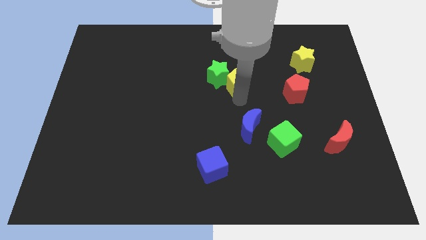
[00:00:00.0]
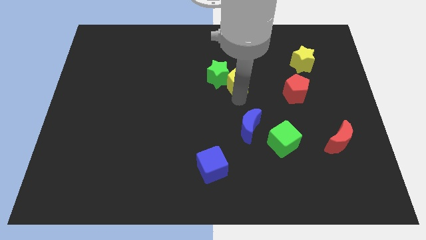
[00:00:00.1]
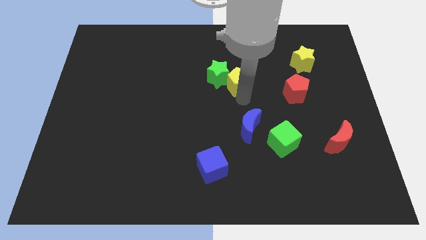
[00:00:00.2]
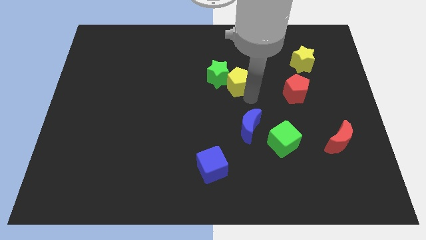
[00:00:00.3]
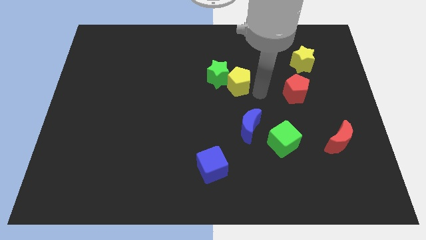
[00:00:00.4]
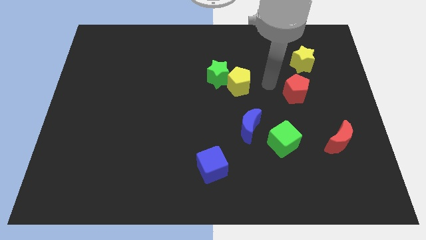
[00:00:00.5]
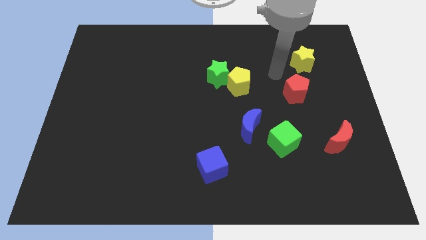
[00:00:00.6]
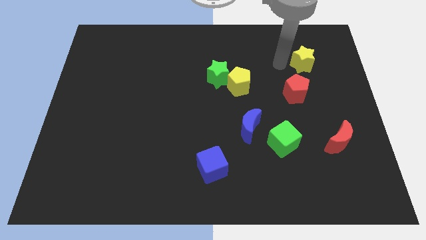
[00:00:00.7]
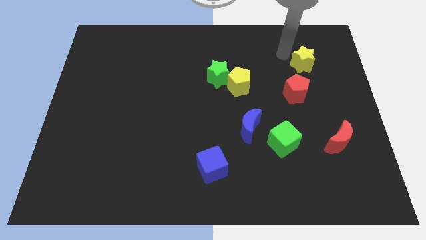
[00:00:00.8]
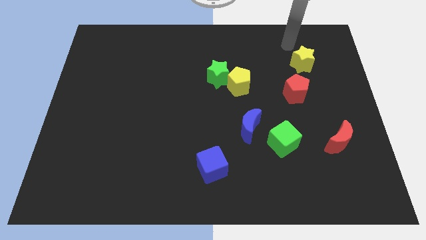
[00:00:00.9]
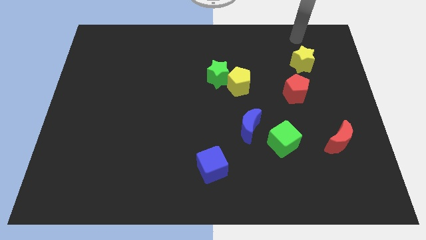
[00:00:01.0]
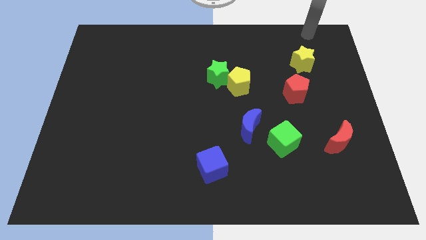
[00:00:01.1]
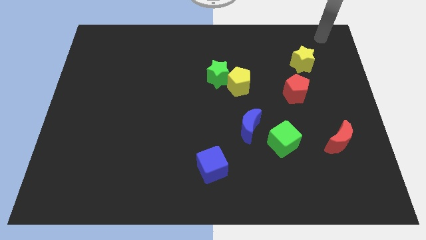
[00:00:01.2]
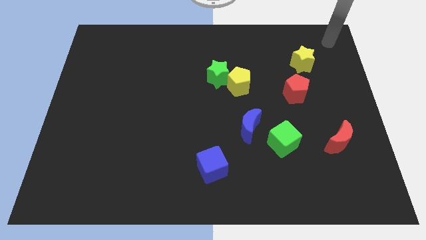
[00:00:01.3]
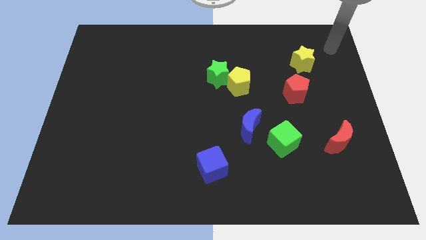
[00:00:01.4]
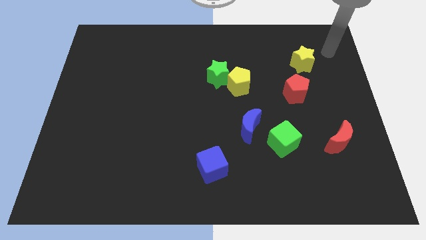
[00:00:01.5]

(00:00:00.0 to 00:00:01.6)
point your arm at the right side of the board

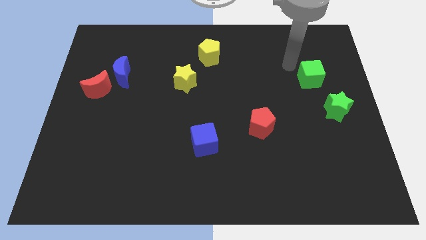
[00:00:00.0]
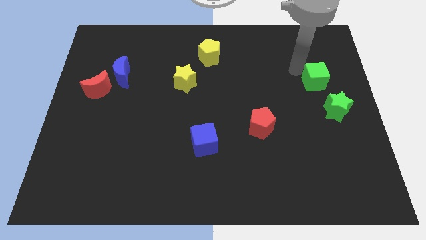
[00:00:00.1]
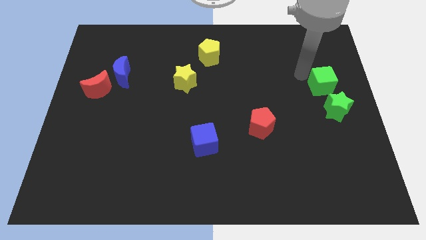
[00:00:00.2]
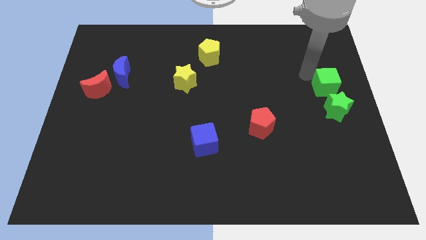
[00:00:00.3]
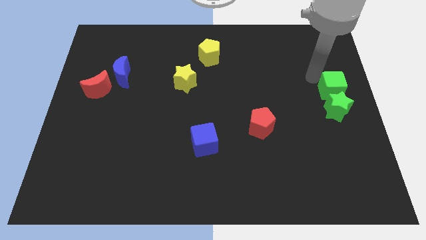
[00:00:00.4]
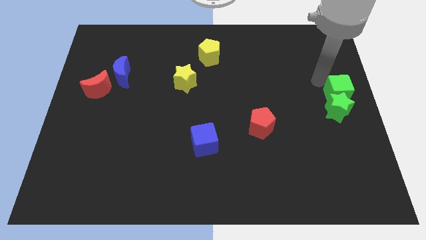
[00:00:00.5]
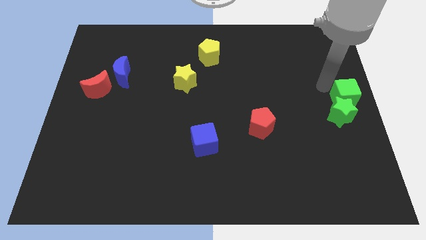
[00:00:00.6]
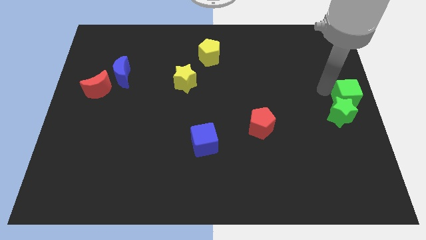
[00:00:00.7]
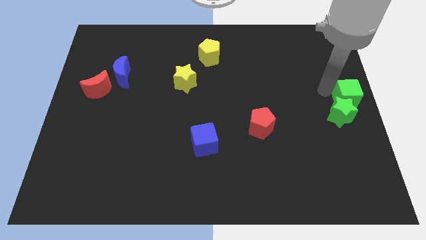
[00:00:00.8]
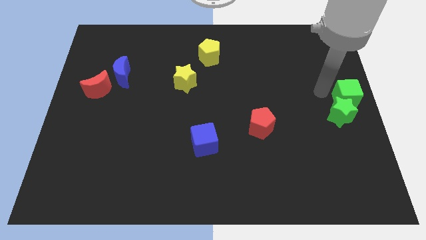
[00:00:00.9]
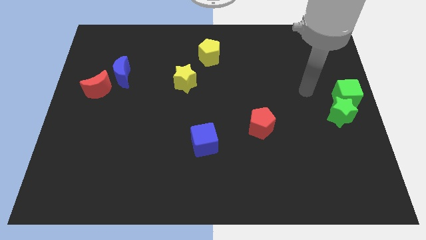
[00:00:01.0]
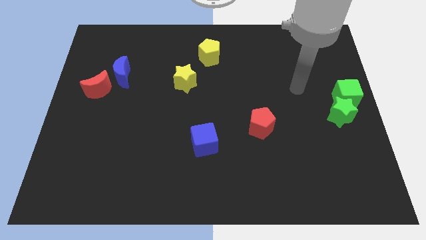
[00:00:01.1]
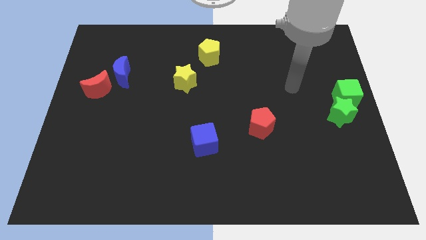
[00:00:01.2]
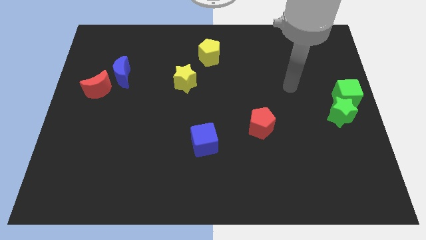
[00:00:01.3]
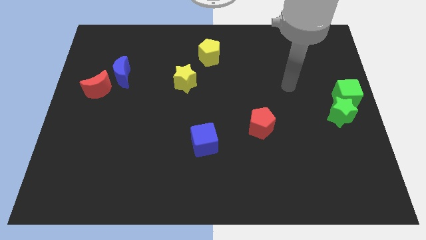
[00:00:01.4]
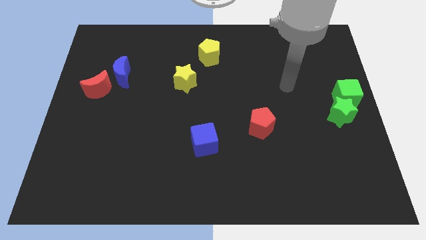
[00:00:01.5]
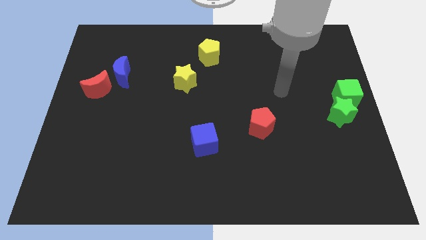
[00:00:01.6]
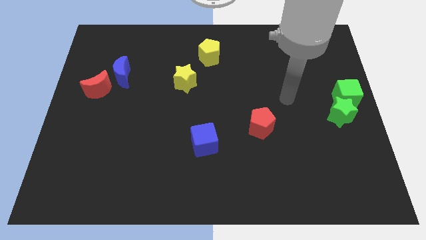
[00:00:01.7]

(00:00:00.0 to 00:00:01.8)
place the green cube to the top right of the green star

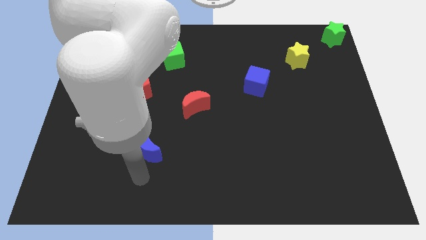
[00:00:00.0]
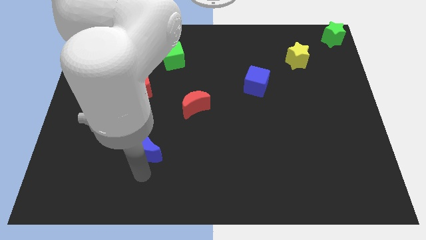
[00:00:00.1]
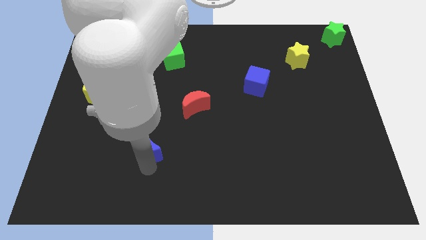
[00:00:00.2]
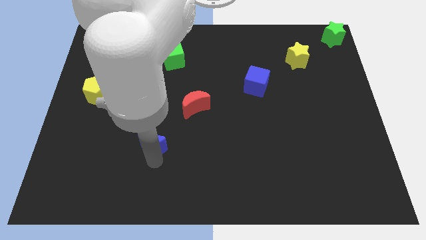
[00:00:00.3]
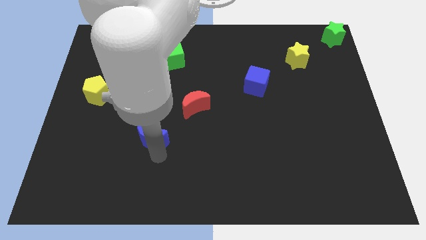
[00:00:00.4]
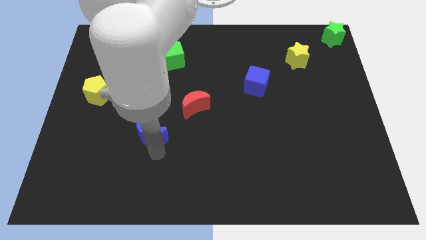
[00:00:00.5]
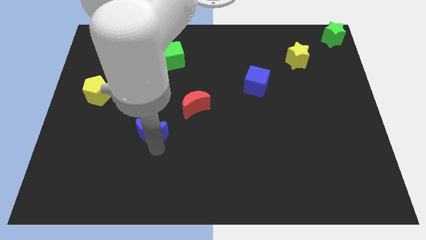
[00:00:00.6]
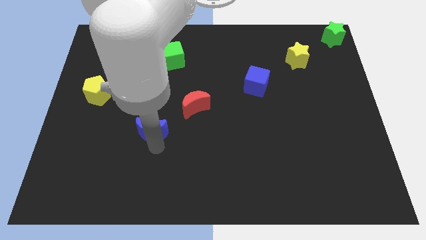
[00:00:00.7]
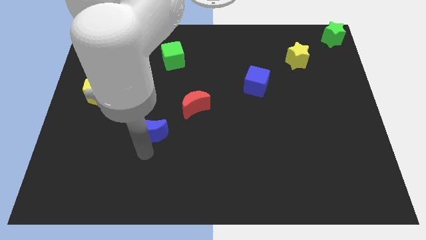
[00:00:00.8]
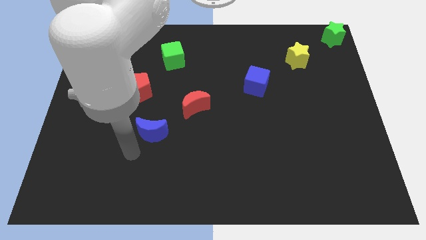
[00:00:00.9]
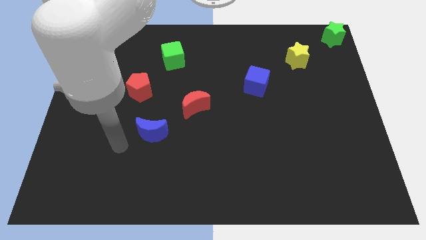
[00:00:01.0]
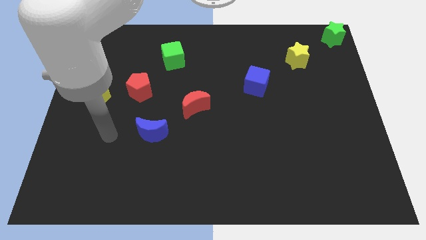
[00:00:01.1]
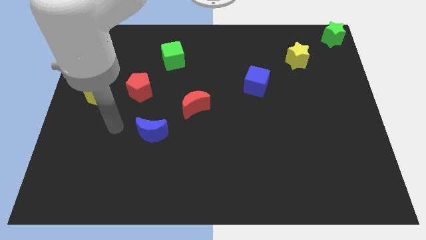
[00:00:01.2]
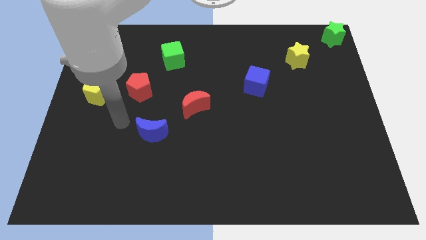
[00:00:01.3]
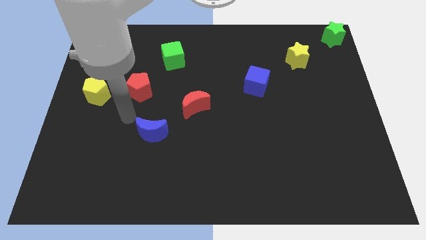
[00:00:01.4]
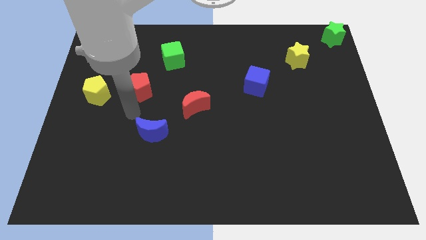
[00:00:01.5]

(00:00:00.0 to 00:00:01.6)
push the blue moon up slightly

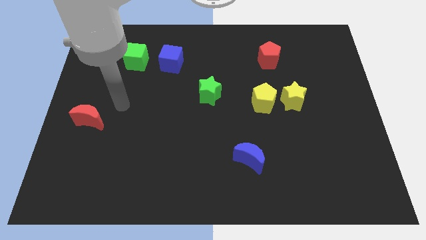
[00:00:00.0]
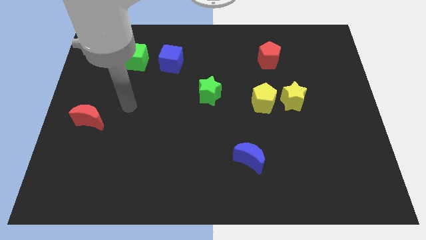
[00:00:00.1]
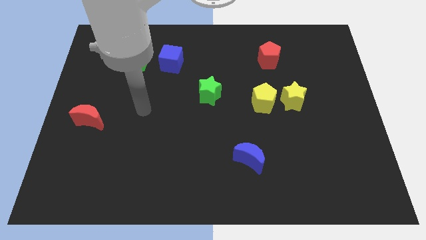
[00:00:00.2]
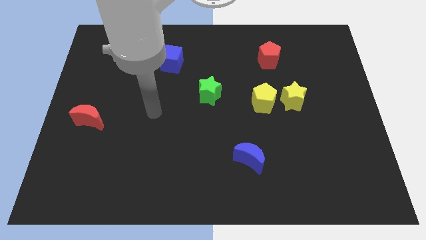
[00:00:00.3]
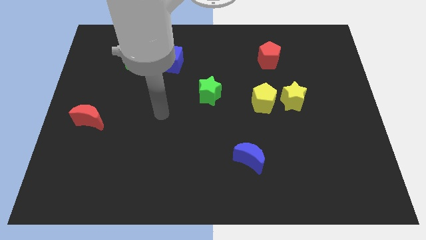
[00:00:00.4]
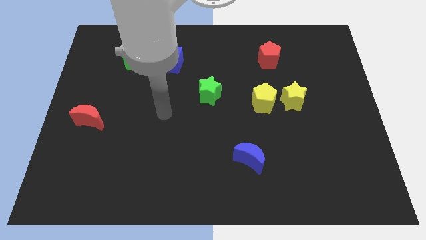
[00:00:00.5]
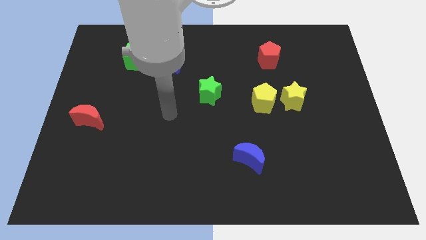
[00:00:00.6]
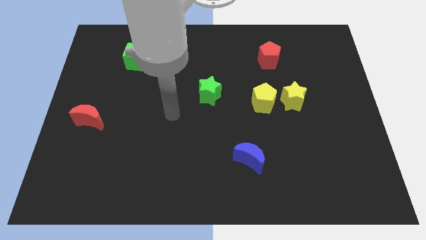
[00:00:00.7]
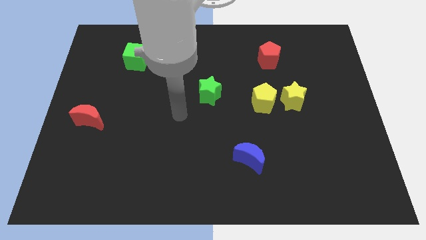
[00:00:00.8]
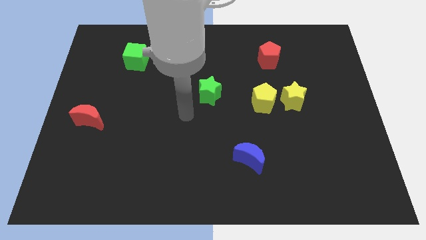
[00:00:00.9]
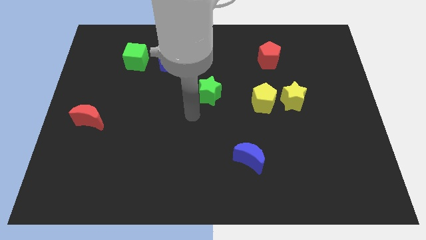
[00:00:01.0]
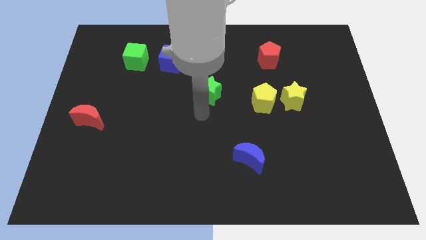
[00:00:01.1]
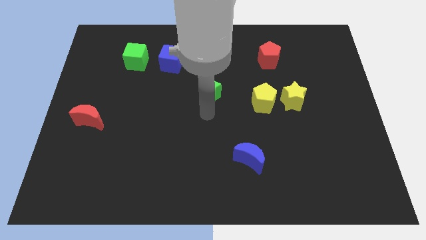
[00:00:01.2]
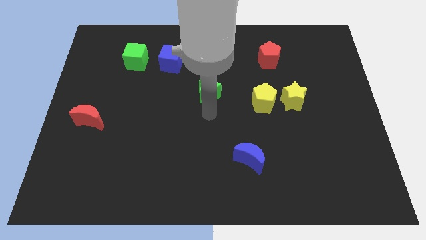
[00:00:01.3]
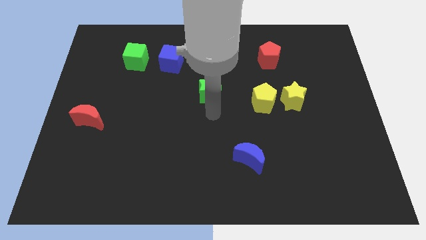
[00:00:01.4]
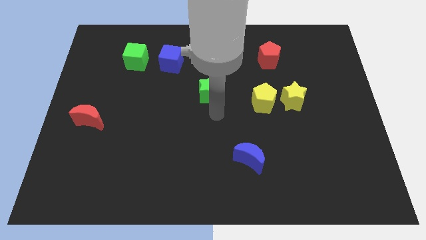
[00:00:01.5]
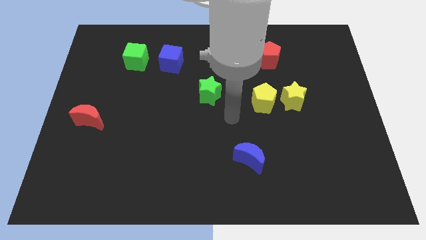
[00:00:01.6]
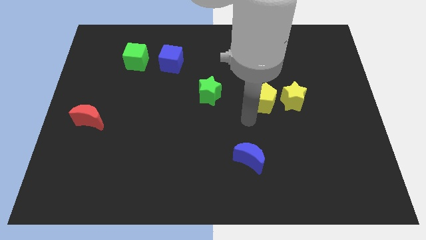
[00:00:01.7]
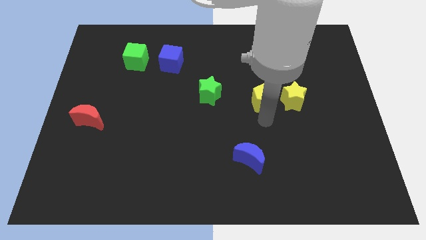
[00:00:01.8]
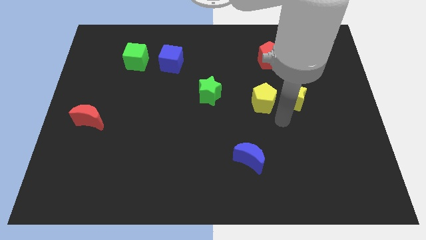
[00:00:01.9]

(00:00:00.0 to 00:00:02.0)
place your arm below the yellow pentagon

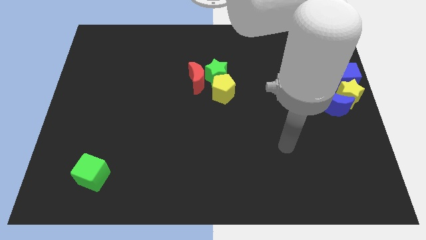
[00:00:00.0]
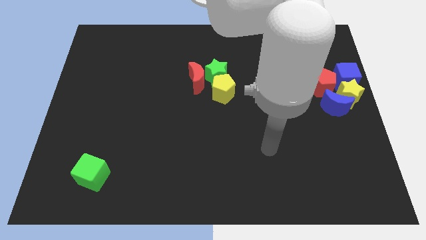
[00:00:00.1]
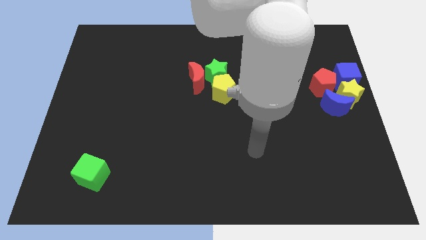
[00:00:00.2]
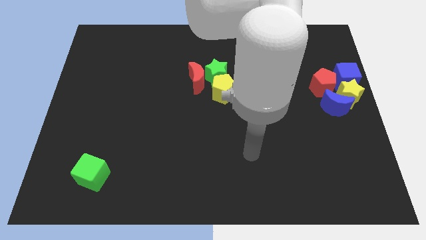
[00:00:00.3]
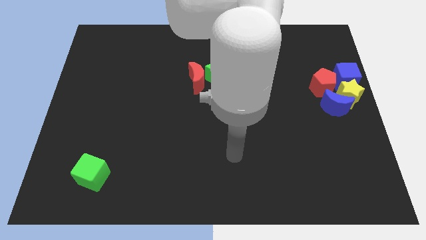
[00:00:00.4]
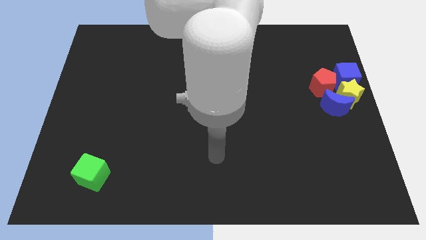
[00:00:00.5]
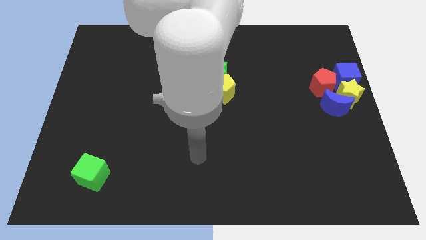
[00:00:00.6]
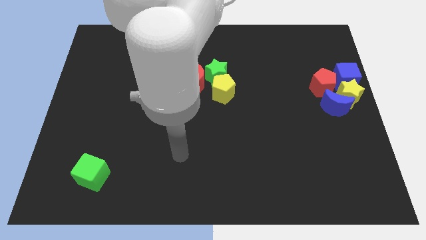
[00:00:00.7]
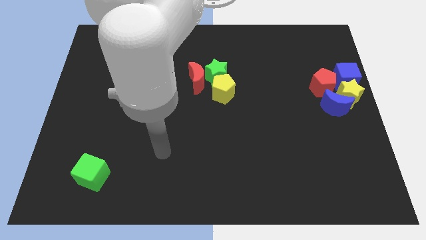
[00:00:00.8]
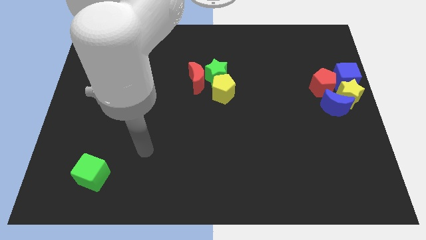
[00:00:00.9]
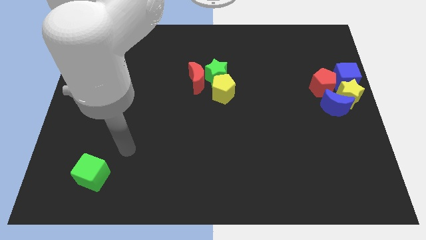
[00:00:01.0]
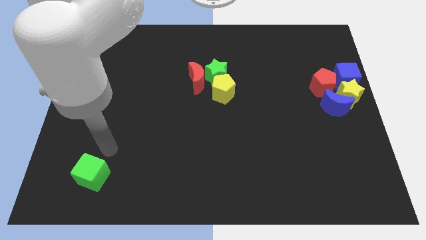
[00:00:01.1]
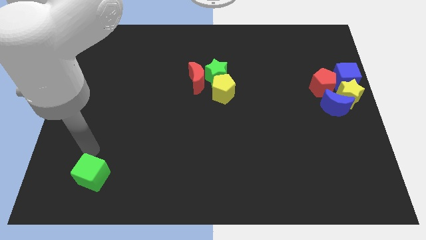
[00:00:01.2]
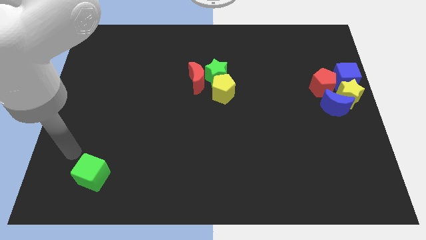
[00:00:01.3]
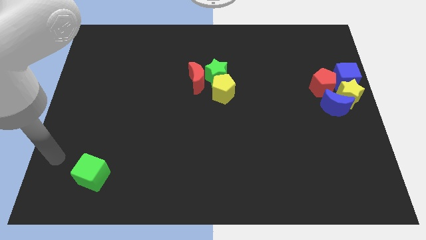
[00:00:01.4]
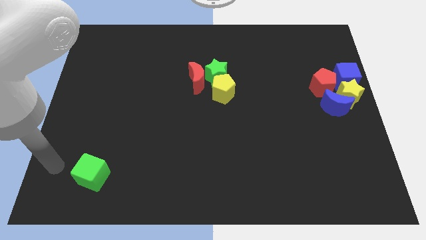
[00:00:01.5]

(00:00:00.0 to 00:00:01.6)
point your arm at the left side of the green cube

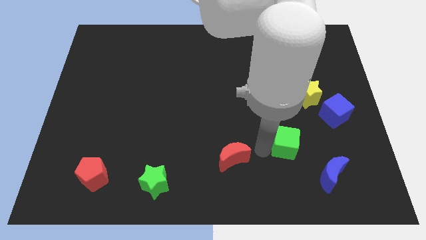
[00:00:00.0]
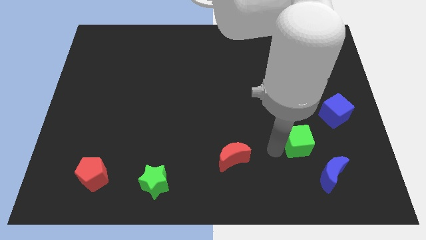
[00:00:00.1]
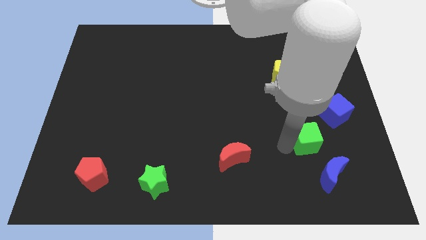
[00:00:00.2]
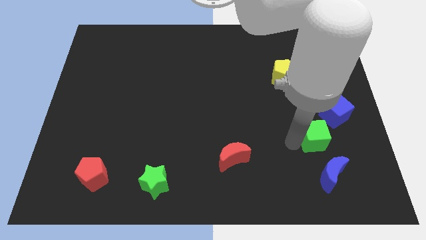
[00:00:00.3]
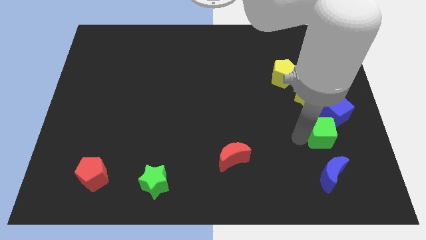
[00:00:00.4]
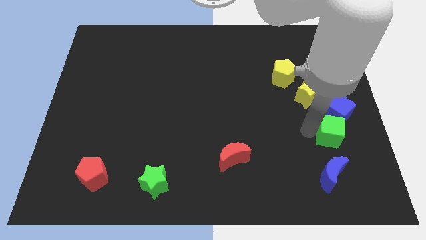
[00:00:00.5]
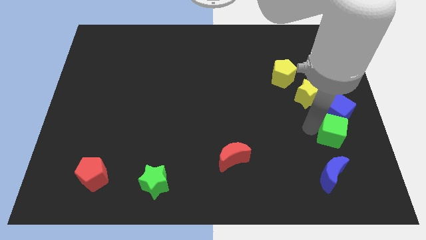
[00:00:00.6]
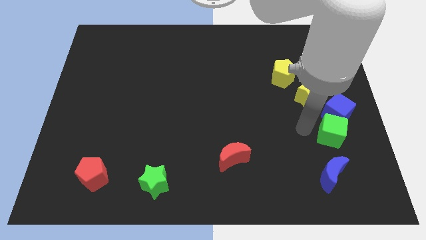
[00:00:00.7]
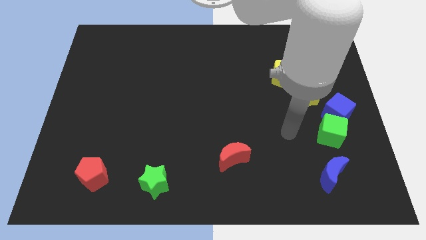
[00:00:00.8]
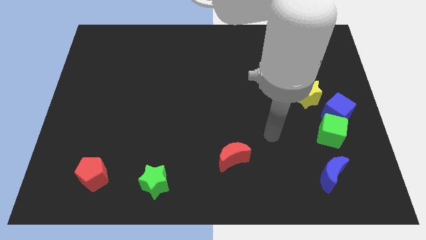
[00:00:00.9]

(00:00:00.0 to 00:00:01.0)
move the green cube closer to the blue cube
